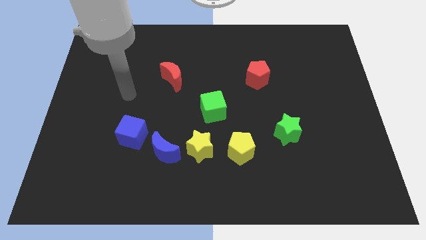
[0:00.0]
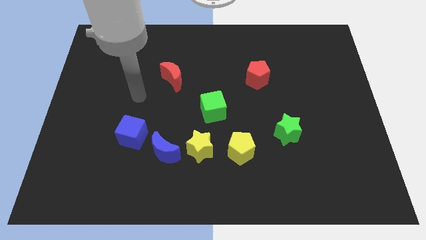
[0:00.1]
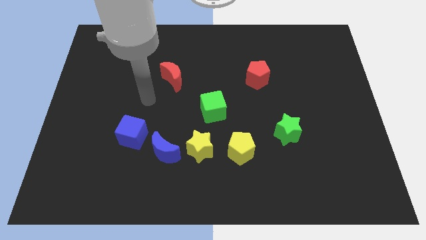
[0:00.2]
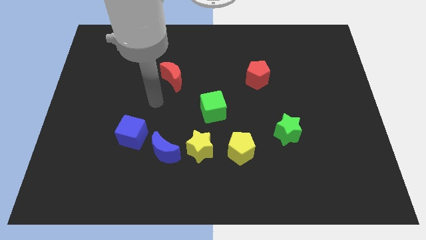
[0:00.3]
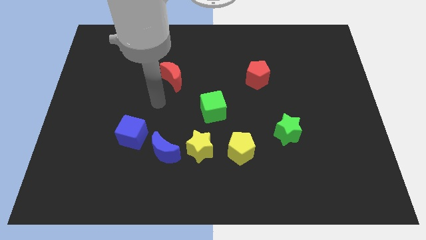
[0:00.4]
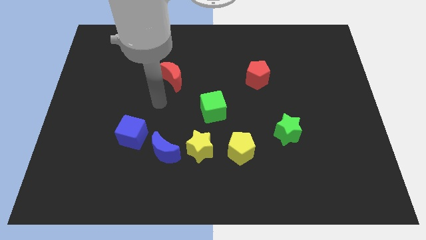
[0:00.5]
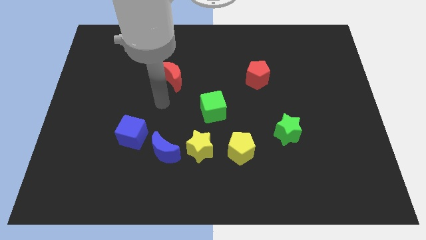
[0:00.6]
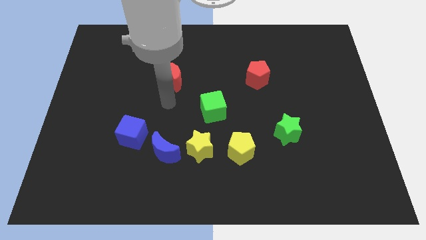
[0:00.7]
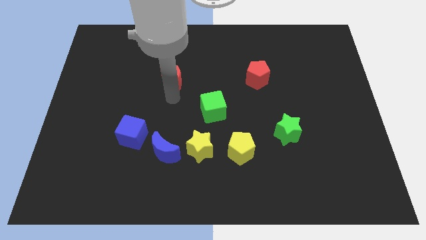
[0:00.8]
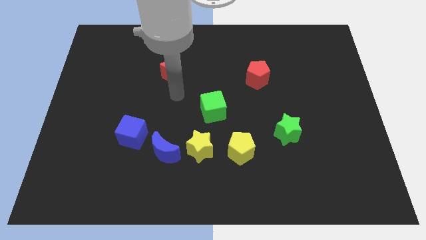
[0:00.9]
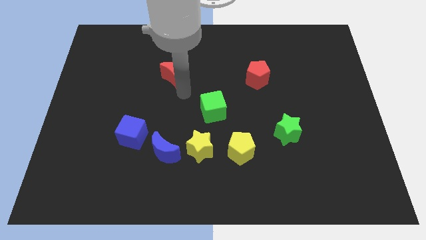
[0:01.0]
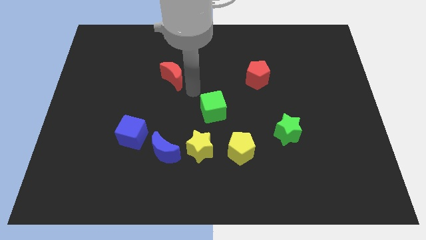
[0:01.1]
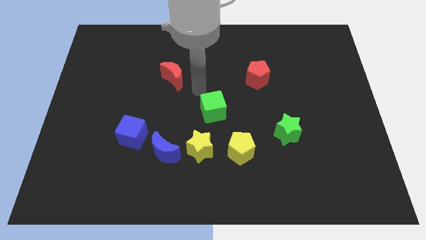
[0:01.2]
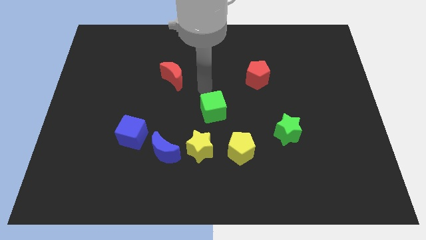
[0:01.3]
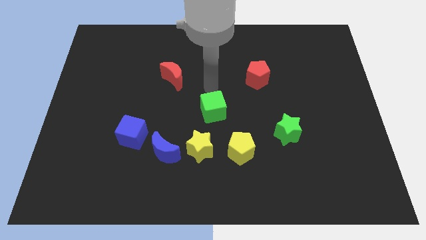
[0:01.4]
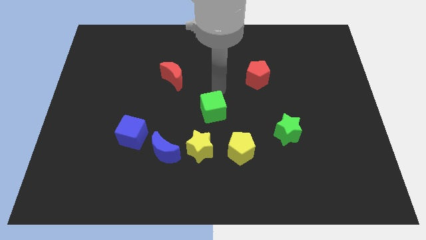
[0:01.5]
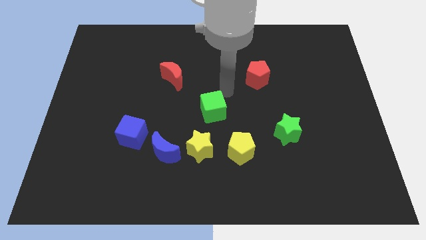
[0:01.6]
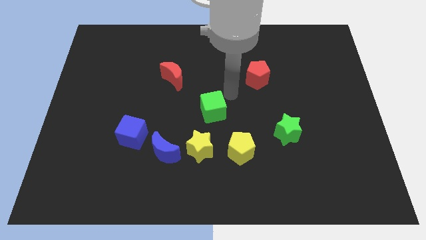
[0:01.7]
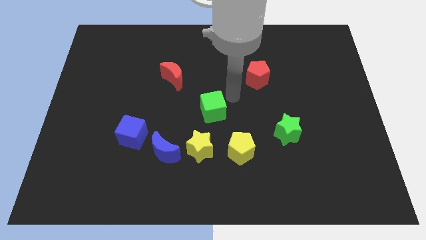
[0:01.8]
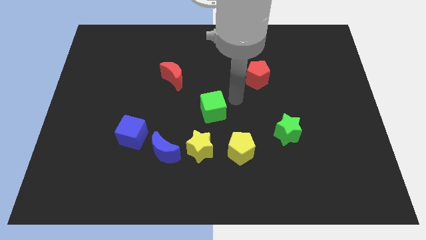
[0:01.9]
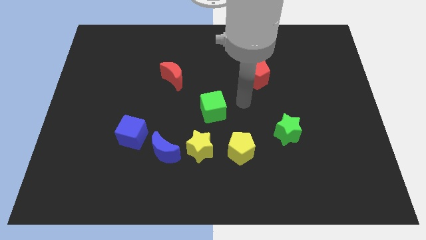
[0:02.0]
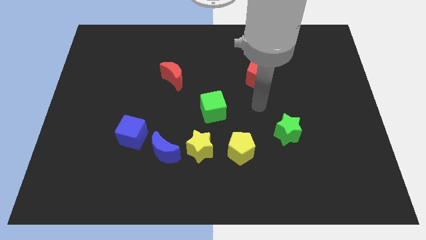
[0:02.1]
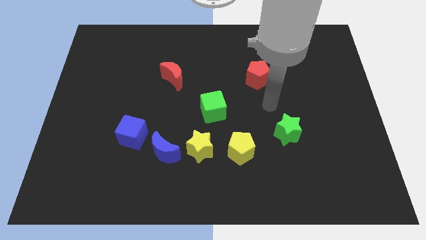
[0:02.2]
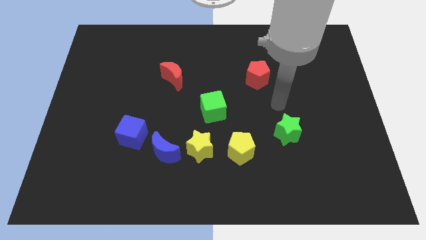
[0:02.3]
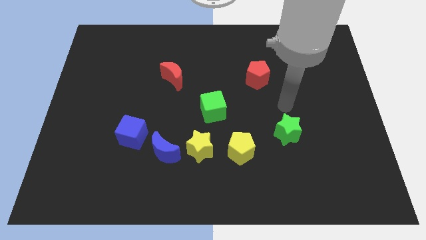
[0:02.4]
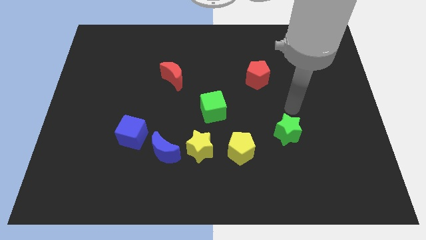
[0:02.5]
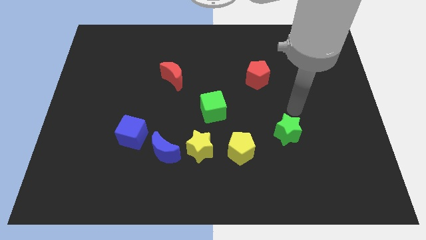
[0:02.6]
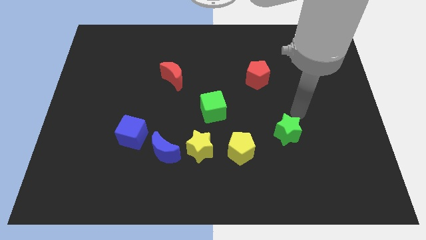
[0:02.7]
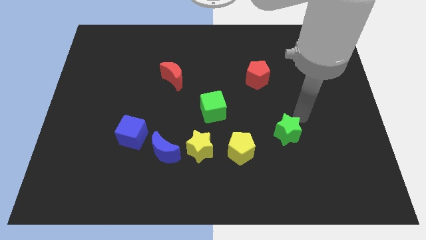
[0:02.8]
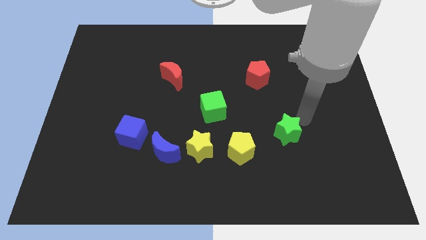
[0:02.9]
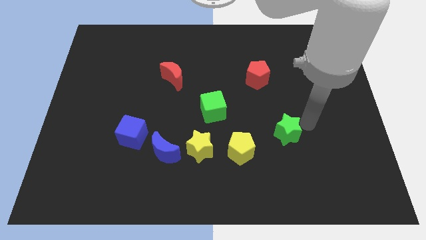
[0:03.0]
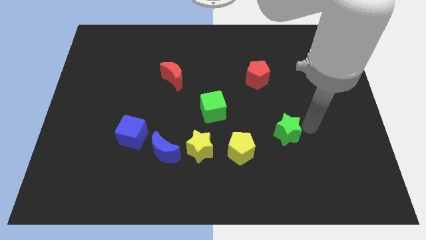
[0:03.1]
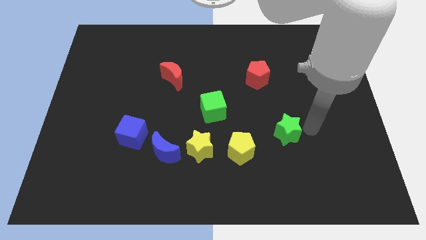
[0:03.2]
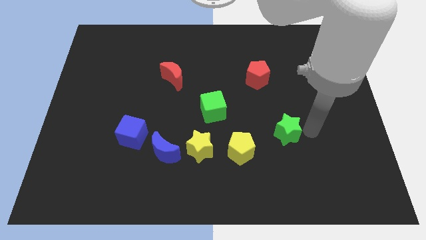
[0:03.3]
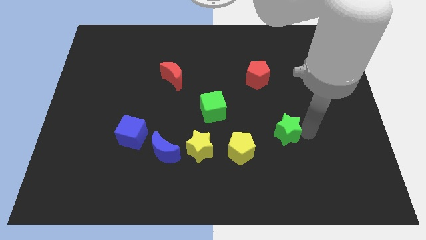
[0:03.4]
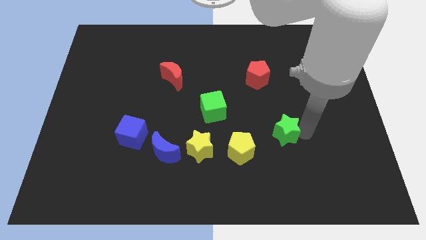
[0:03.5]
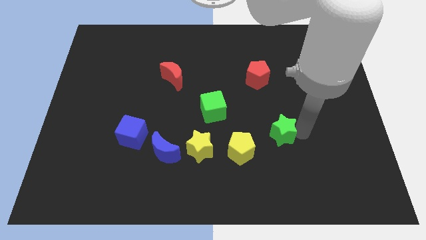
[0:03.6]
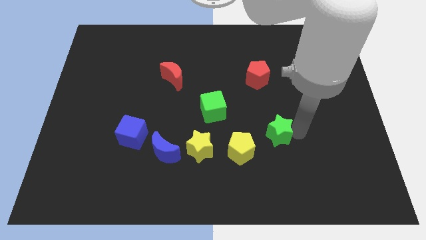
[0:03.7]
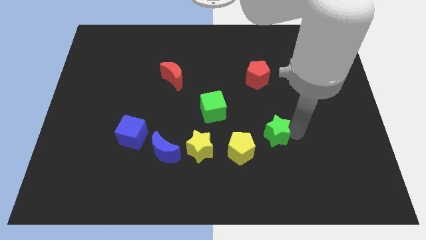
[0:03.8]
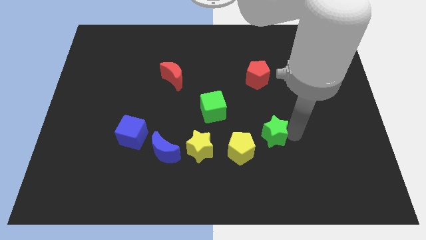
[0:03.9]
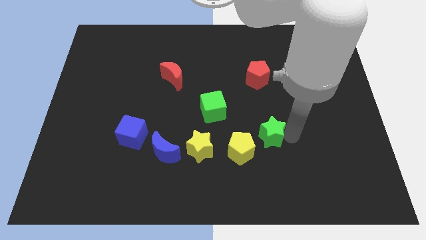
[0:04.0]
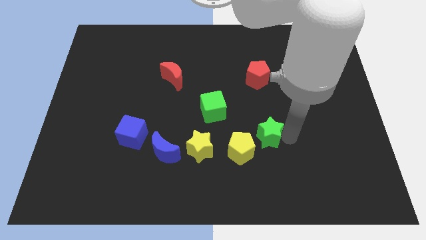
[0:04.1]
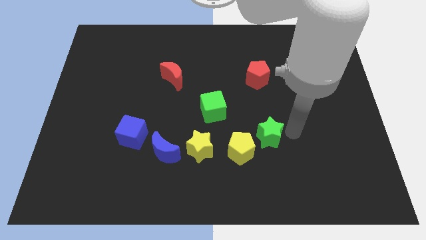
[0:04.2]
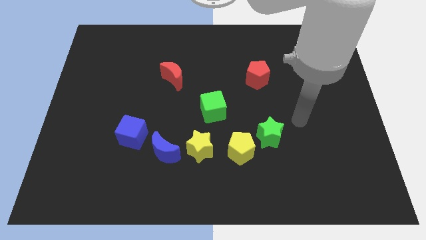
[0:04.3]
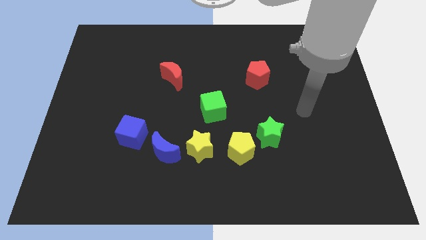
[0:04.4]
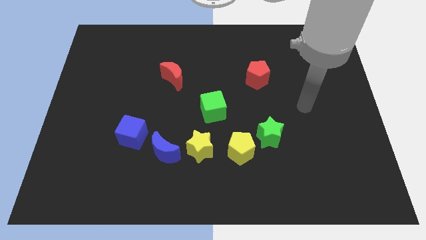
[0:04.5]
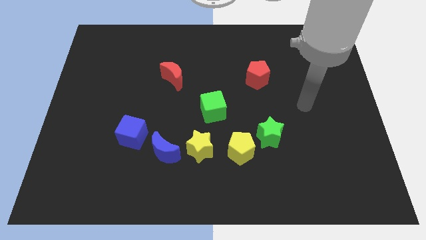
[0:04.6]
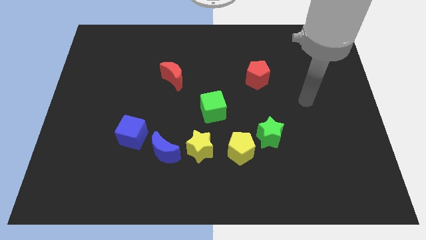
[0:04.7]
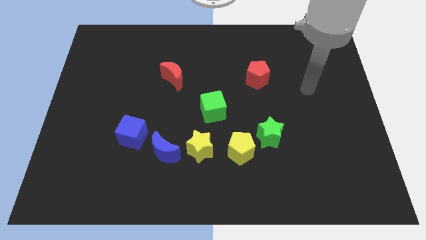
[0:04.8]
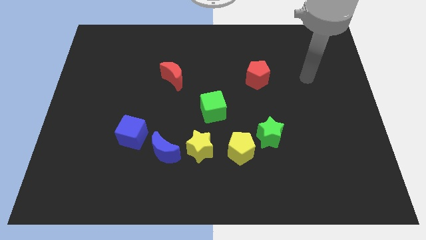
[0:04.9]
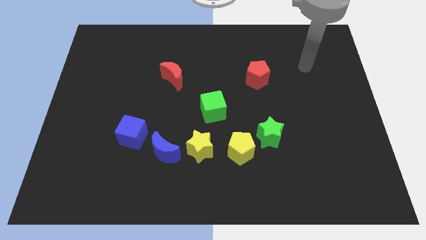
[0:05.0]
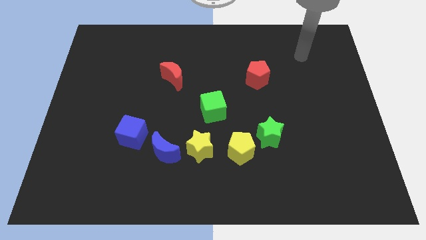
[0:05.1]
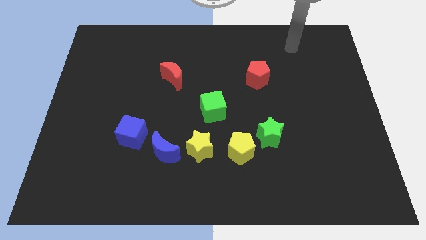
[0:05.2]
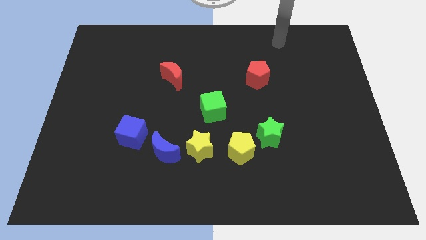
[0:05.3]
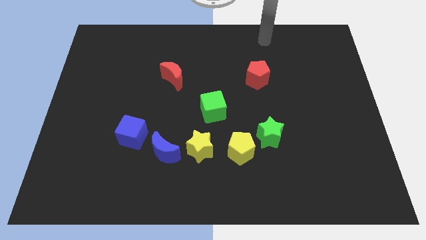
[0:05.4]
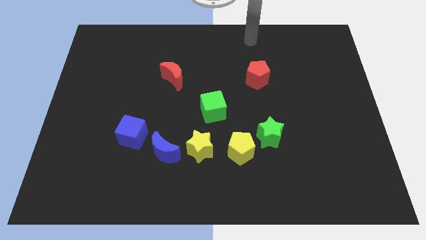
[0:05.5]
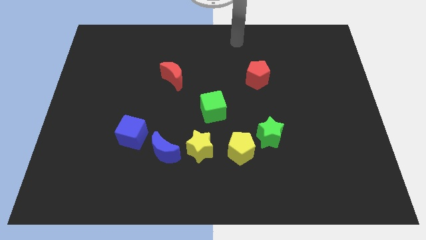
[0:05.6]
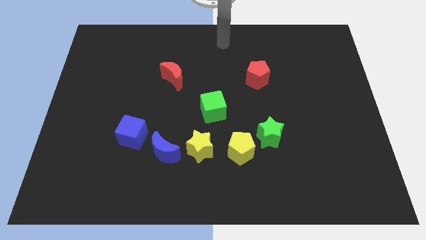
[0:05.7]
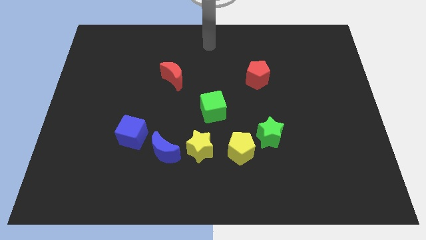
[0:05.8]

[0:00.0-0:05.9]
move the green star close to the yellow pentagon

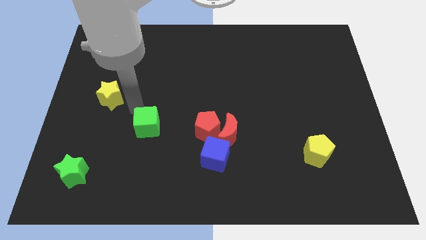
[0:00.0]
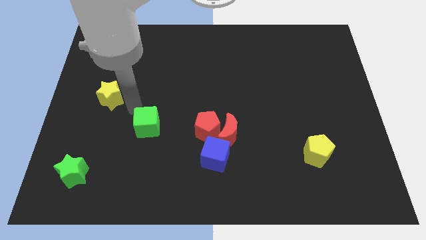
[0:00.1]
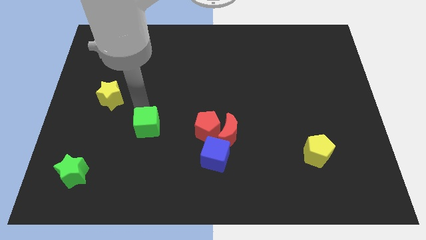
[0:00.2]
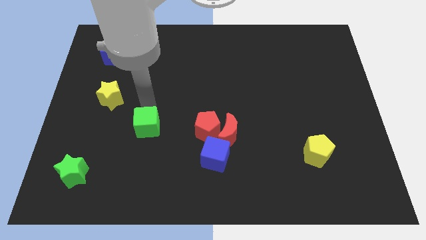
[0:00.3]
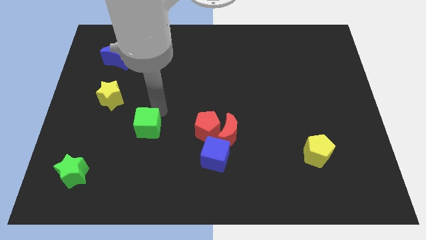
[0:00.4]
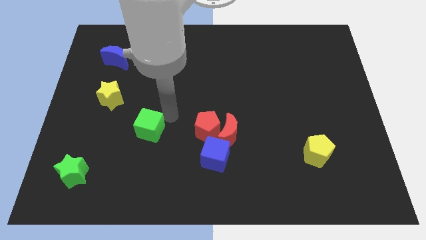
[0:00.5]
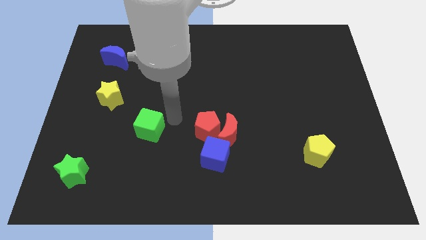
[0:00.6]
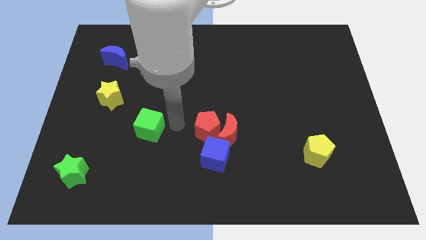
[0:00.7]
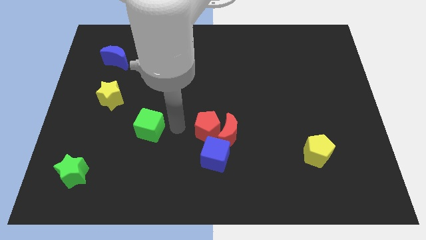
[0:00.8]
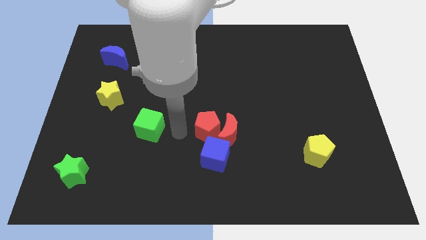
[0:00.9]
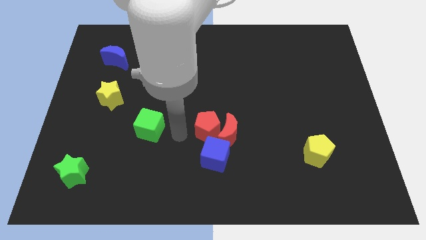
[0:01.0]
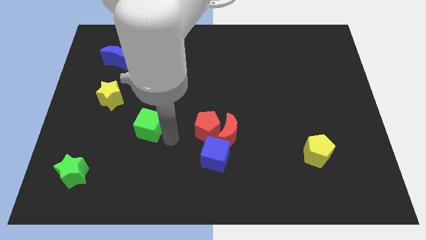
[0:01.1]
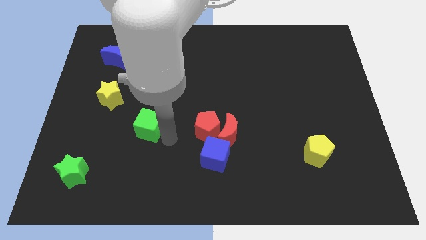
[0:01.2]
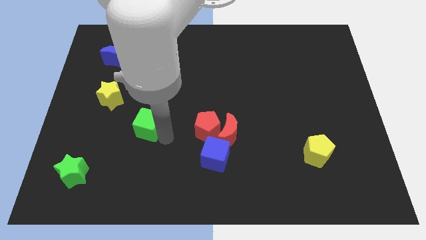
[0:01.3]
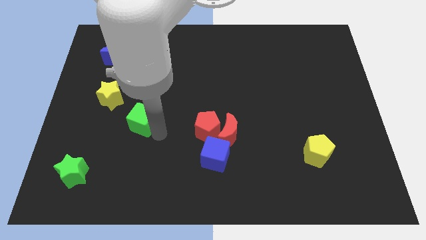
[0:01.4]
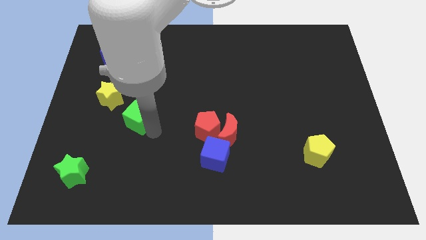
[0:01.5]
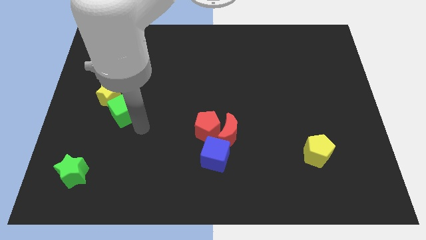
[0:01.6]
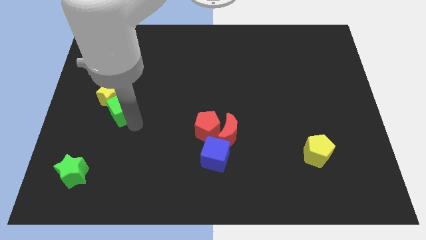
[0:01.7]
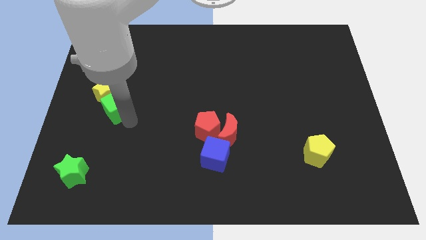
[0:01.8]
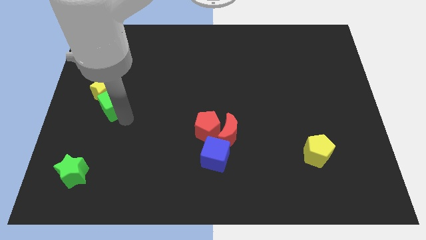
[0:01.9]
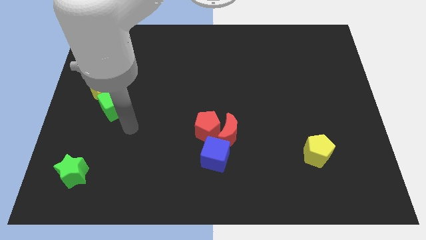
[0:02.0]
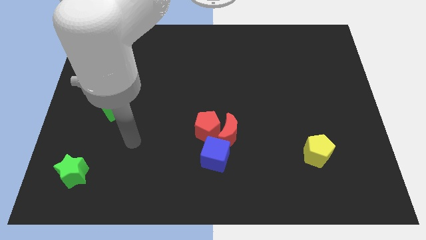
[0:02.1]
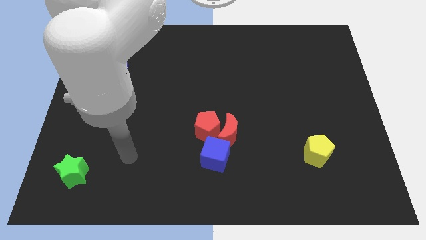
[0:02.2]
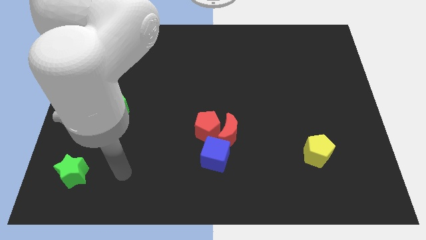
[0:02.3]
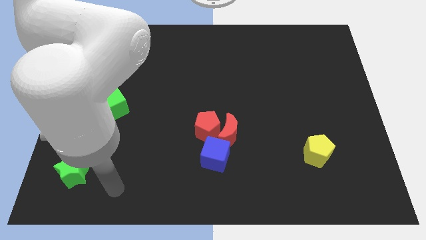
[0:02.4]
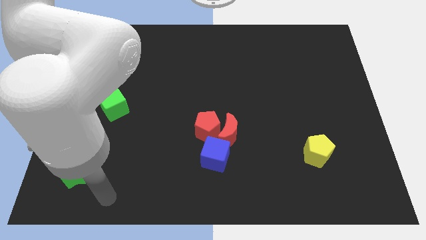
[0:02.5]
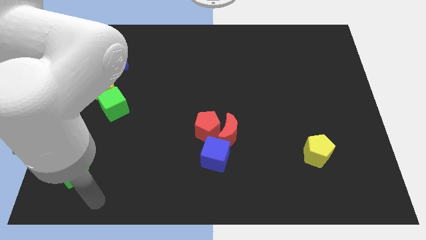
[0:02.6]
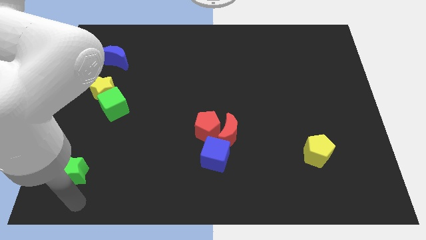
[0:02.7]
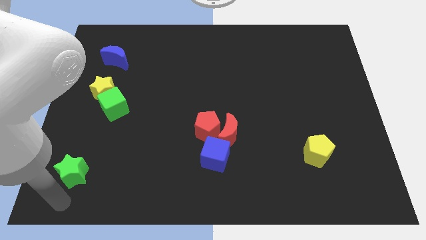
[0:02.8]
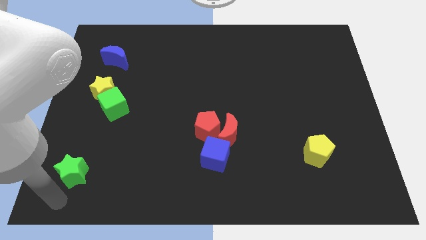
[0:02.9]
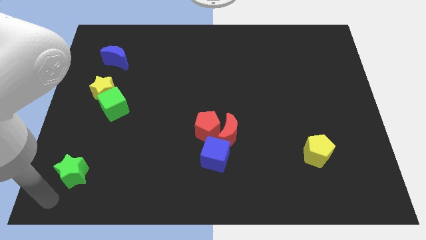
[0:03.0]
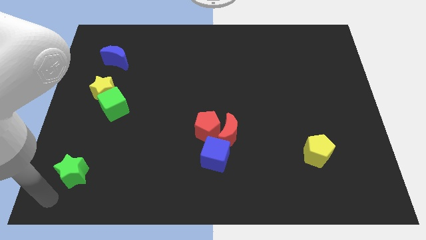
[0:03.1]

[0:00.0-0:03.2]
push the green cube into the yellow star
